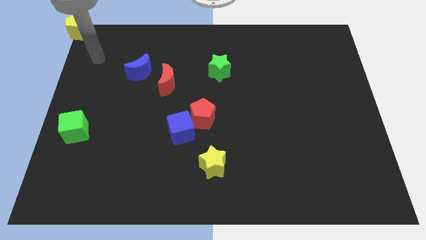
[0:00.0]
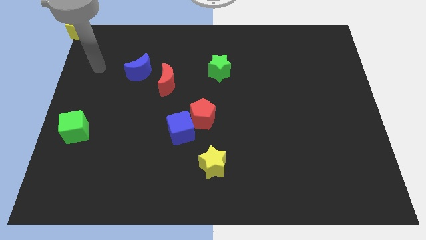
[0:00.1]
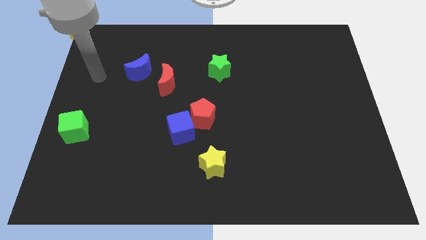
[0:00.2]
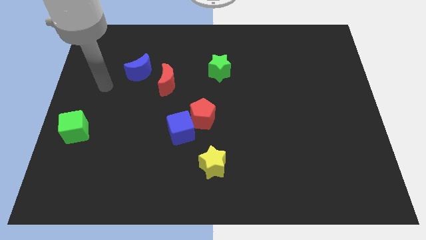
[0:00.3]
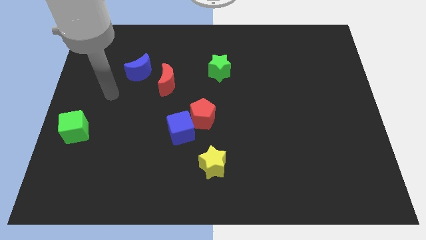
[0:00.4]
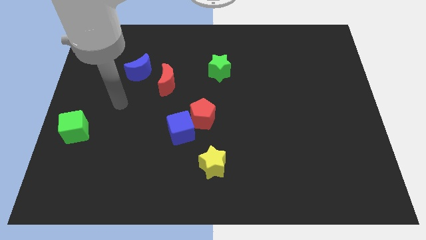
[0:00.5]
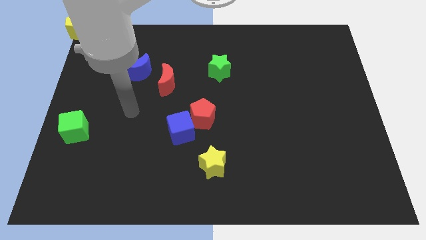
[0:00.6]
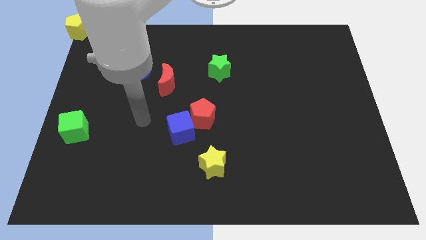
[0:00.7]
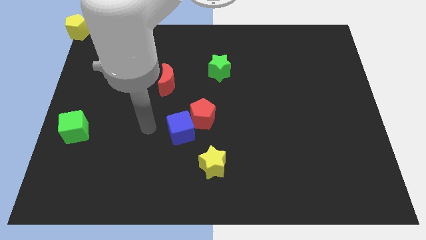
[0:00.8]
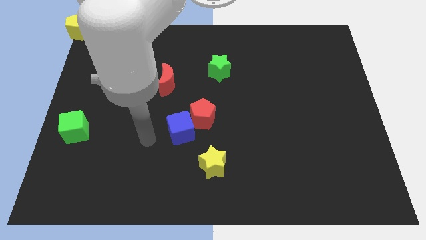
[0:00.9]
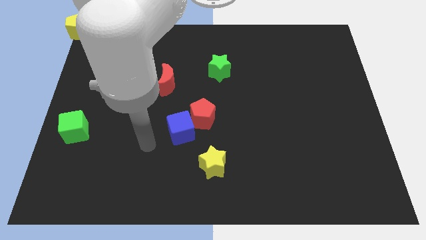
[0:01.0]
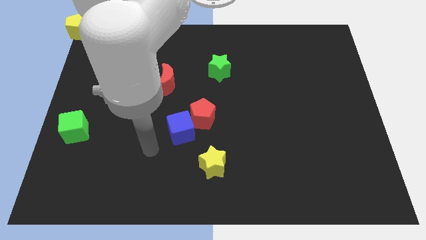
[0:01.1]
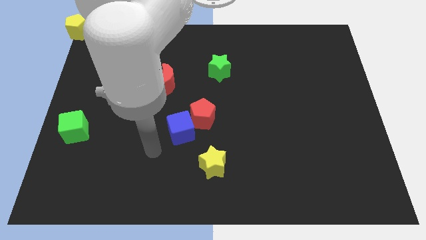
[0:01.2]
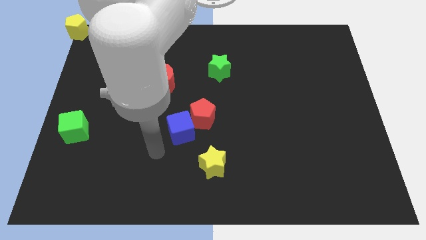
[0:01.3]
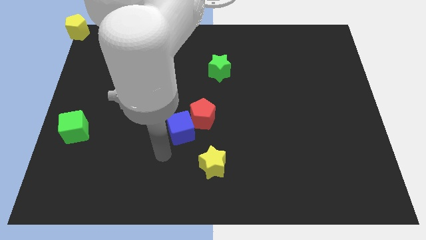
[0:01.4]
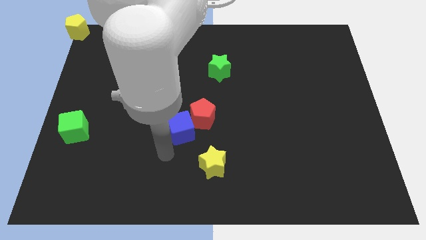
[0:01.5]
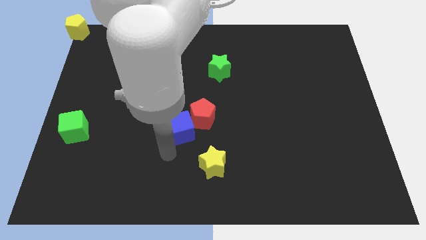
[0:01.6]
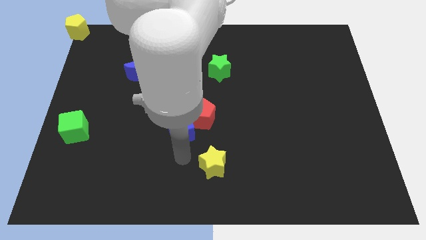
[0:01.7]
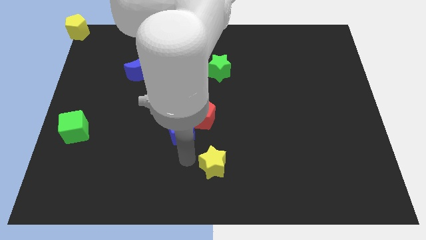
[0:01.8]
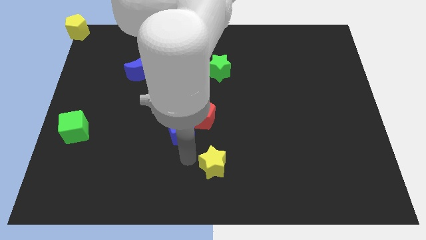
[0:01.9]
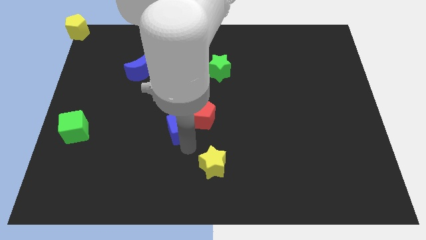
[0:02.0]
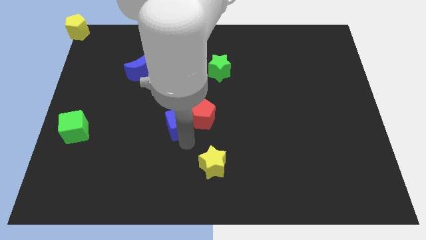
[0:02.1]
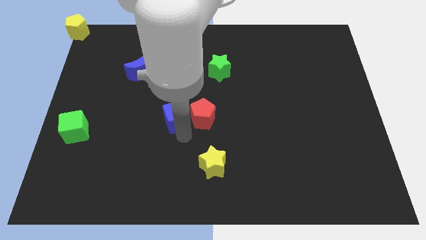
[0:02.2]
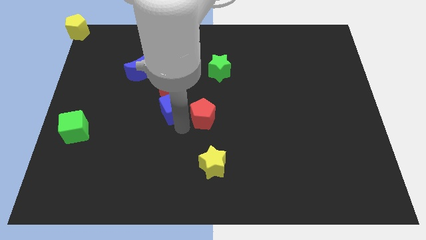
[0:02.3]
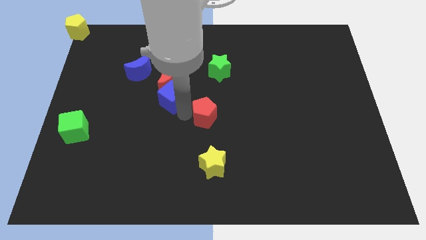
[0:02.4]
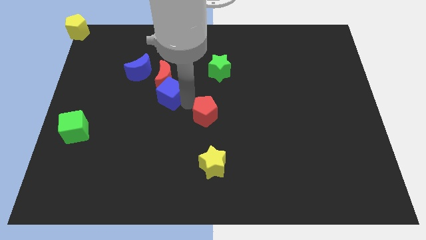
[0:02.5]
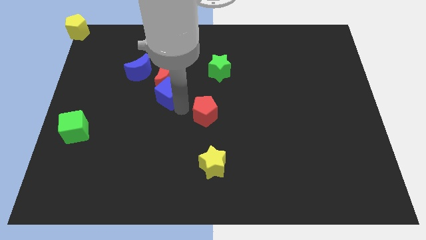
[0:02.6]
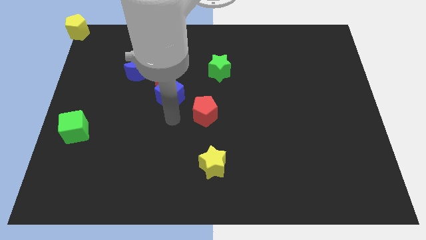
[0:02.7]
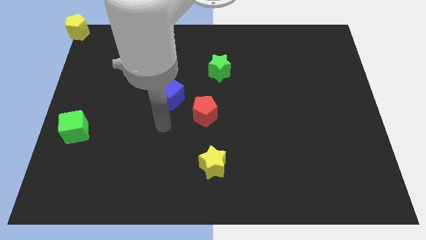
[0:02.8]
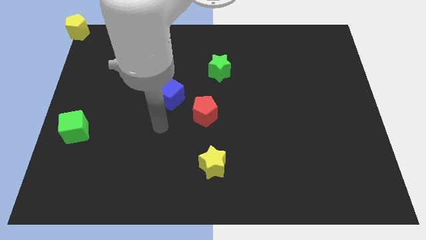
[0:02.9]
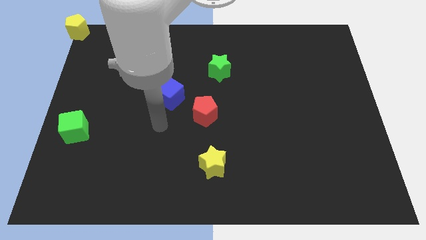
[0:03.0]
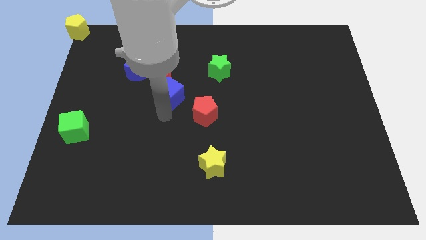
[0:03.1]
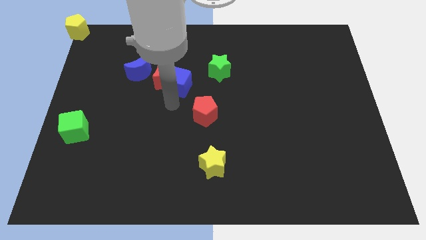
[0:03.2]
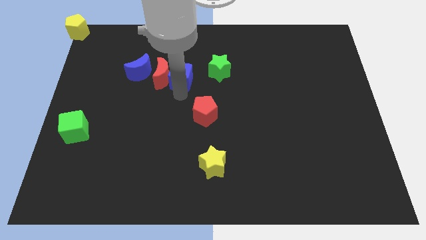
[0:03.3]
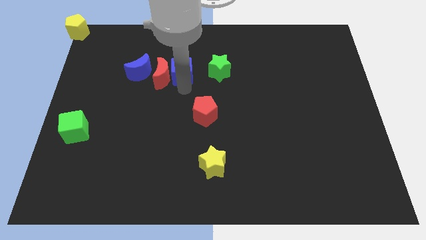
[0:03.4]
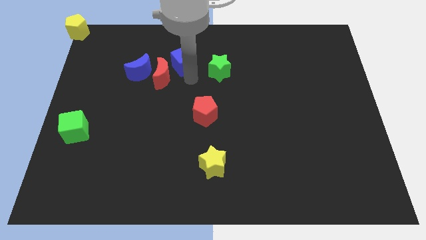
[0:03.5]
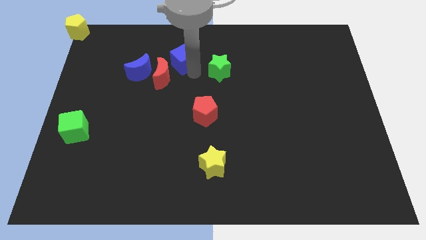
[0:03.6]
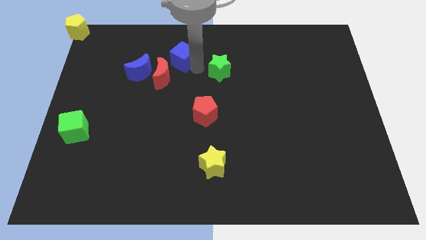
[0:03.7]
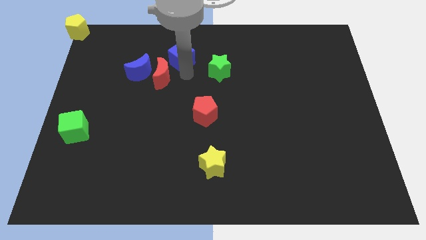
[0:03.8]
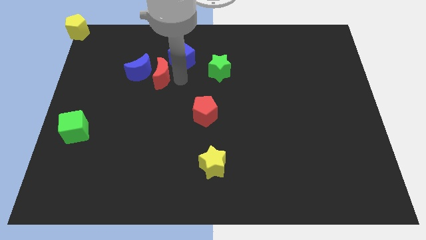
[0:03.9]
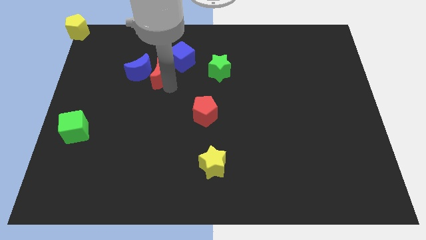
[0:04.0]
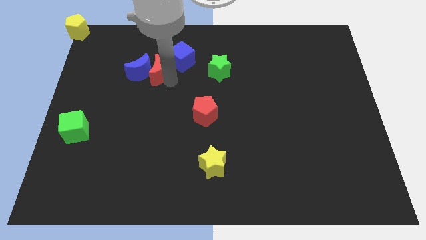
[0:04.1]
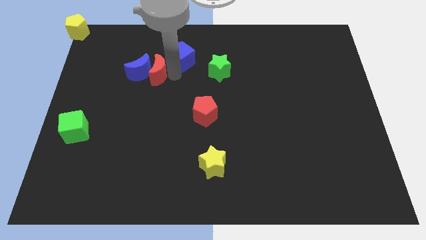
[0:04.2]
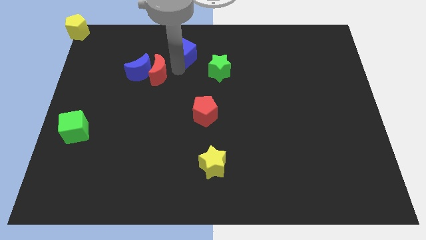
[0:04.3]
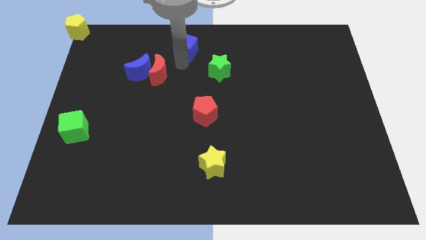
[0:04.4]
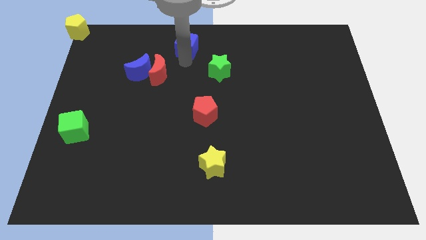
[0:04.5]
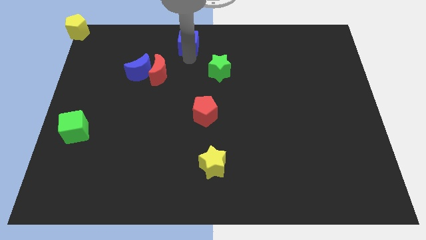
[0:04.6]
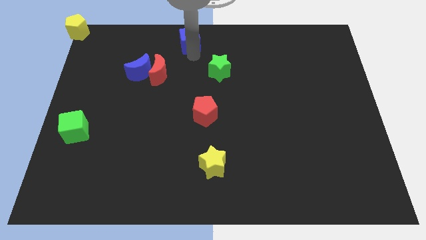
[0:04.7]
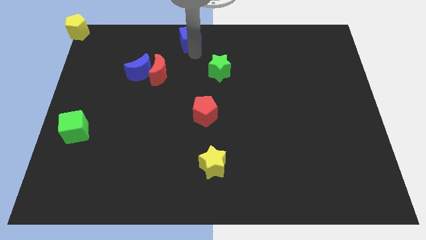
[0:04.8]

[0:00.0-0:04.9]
move the blue cube to the top center of the board

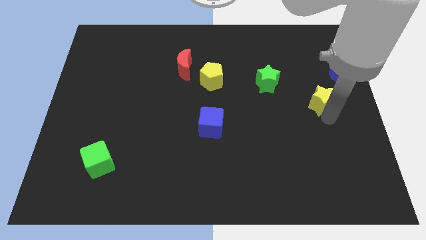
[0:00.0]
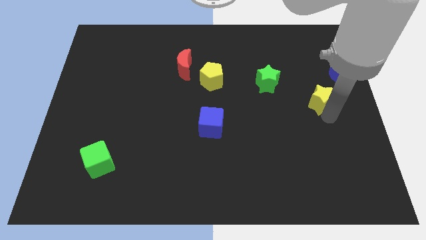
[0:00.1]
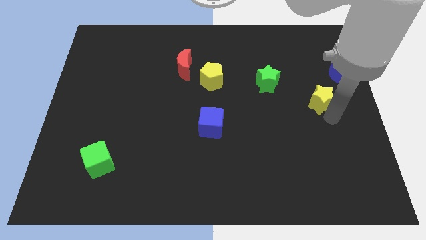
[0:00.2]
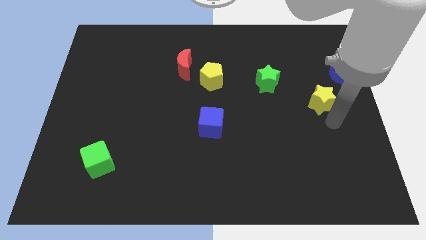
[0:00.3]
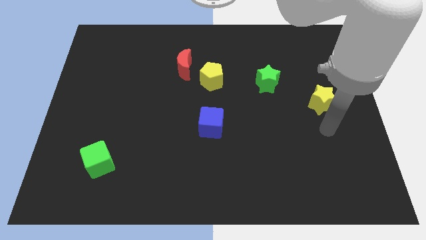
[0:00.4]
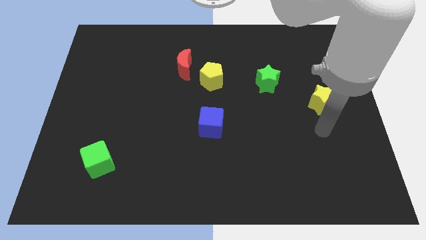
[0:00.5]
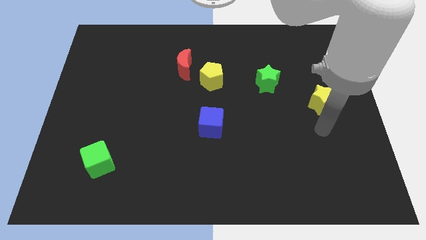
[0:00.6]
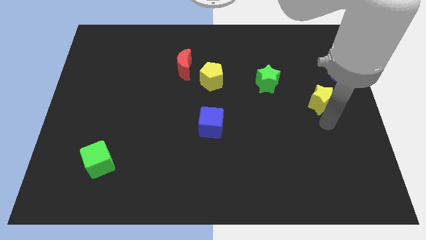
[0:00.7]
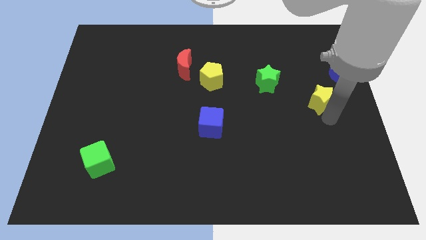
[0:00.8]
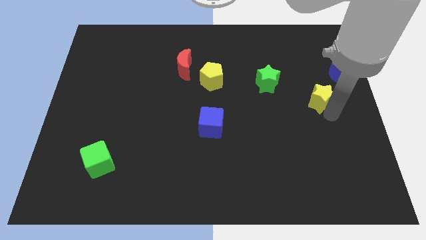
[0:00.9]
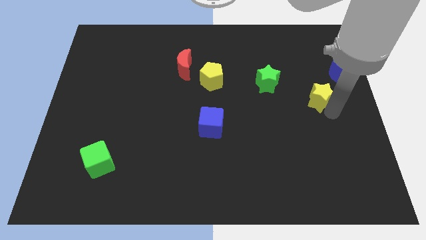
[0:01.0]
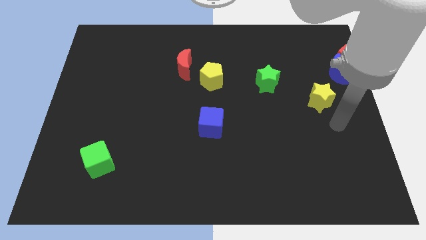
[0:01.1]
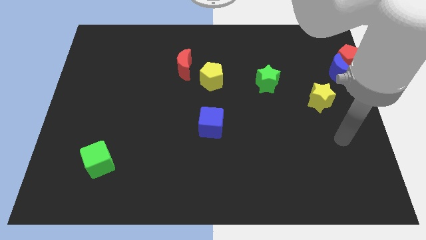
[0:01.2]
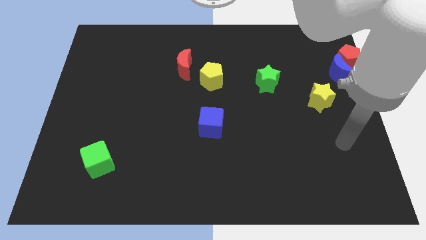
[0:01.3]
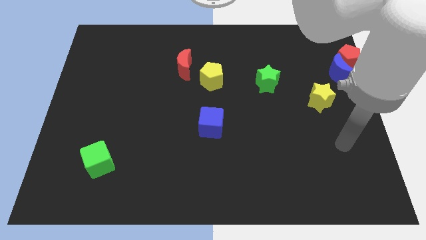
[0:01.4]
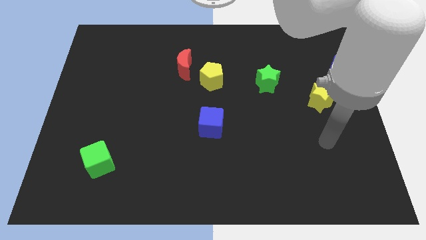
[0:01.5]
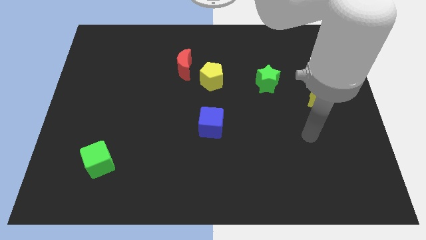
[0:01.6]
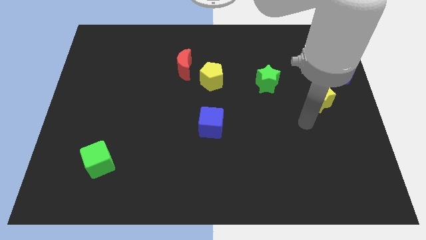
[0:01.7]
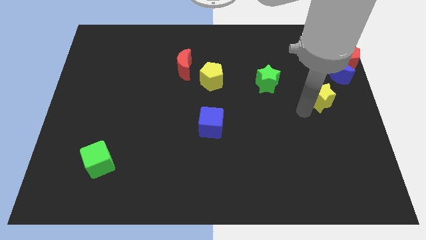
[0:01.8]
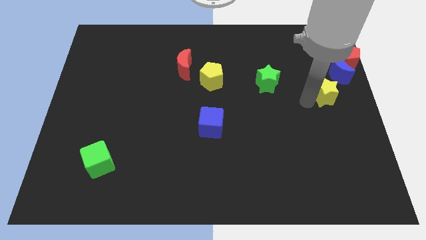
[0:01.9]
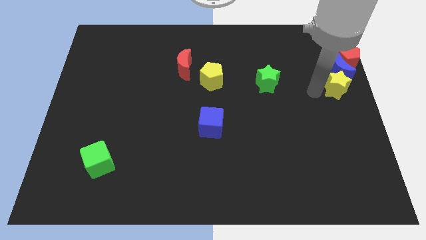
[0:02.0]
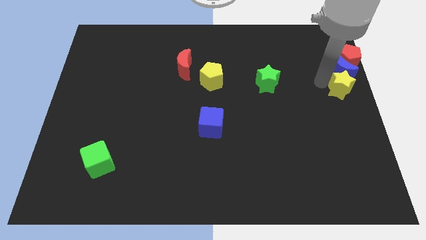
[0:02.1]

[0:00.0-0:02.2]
move the yellow star to the vertical line

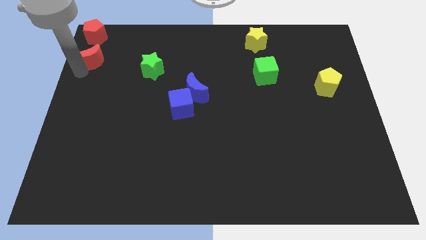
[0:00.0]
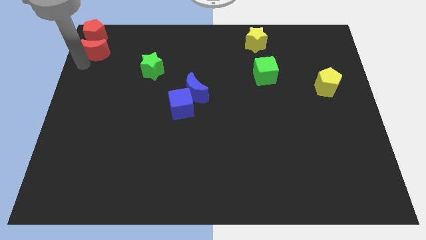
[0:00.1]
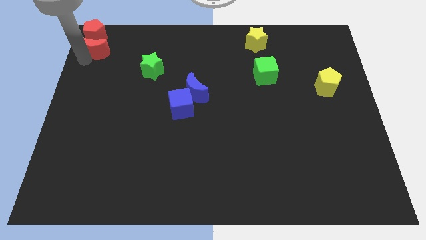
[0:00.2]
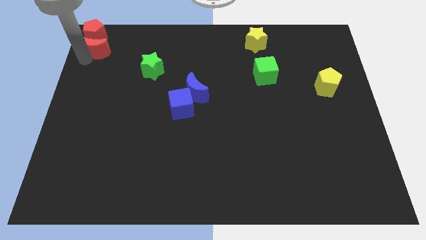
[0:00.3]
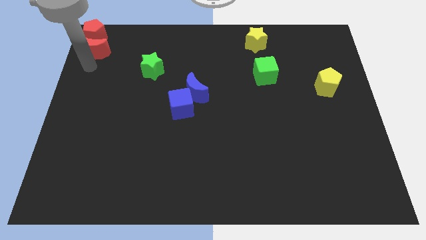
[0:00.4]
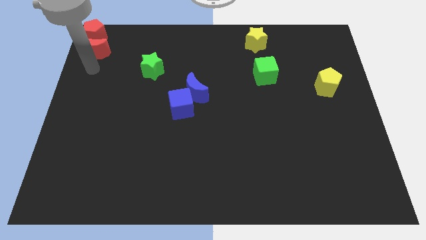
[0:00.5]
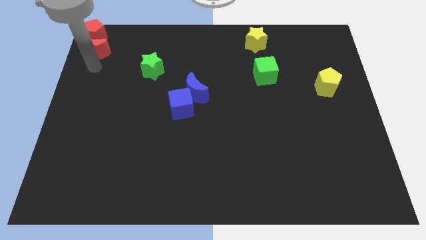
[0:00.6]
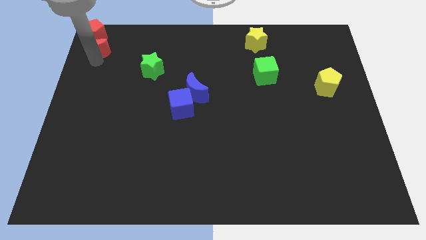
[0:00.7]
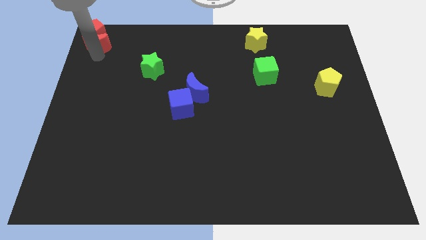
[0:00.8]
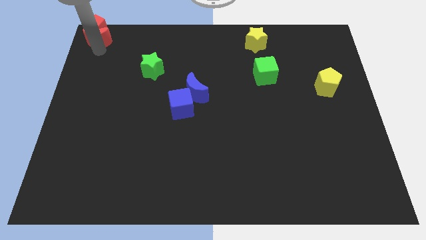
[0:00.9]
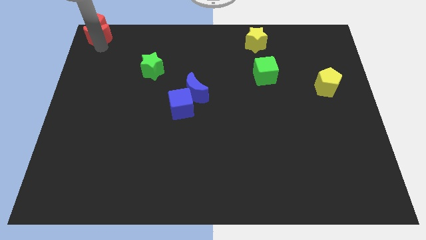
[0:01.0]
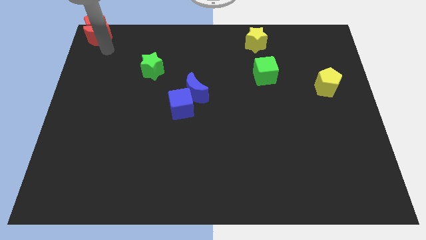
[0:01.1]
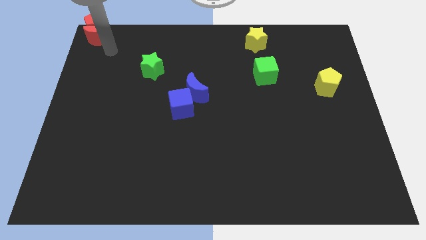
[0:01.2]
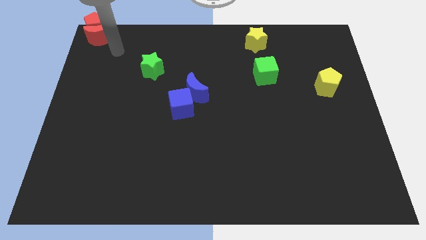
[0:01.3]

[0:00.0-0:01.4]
move red moon into red pentagon

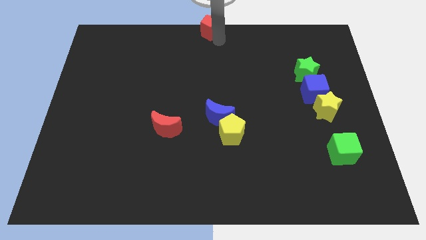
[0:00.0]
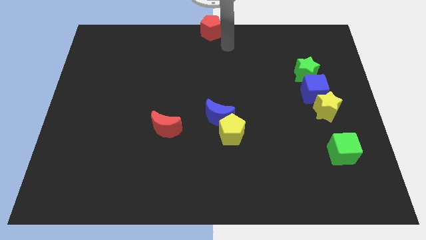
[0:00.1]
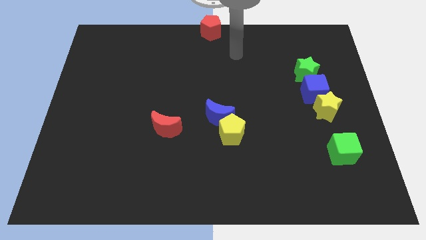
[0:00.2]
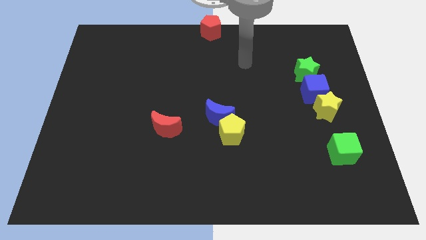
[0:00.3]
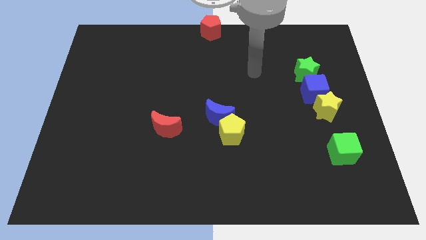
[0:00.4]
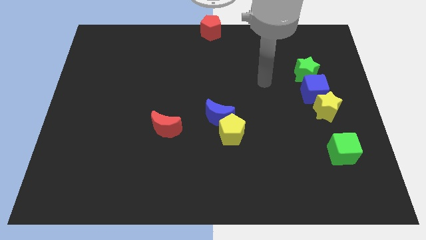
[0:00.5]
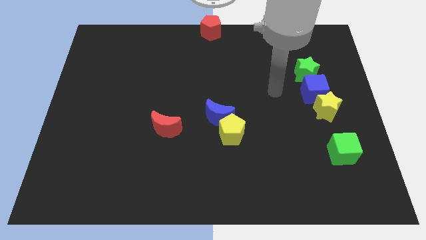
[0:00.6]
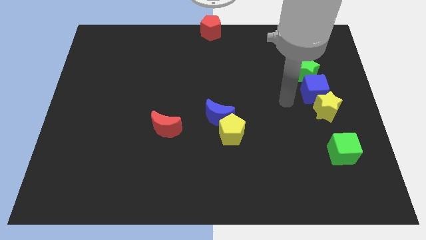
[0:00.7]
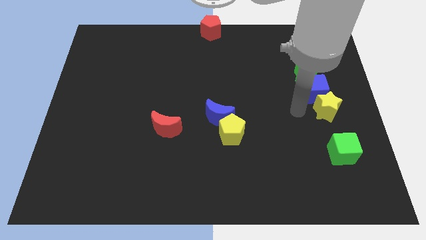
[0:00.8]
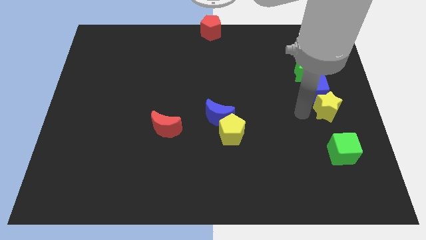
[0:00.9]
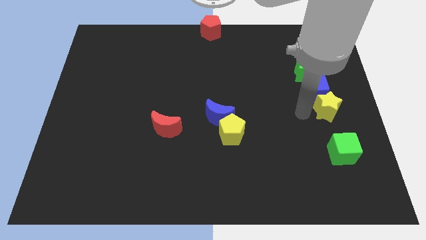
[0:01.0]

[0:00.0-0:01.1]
point your arm at the left of the yellow star
